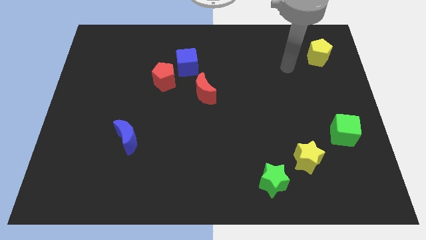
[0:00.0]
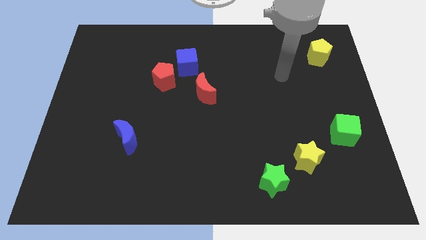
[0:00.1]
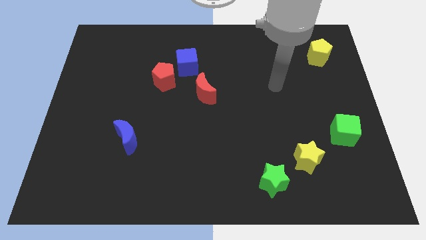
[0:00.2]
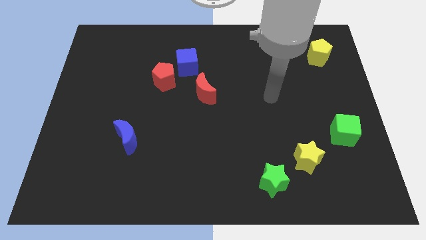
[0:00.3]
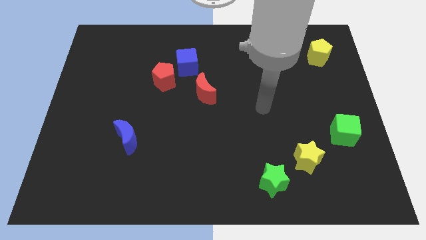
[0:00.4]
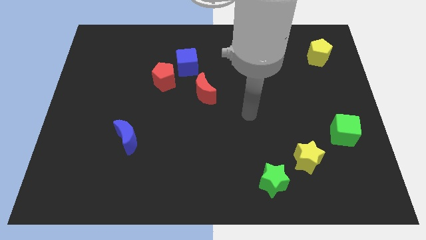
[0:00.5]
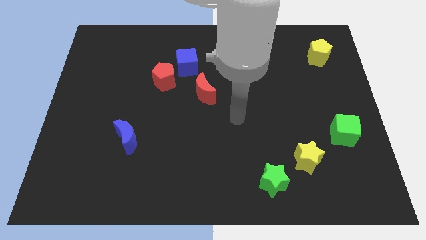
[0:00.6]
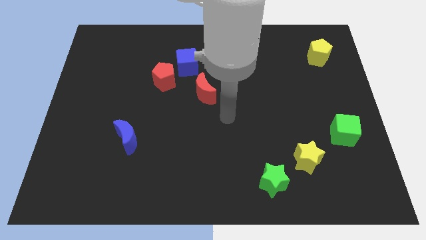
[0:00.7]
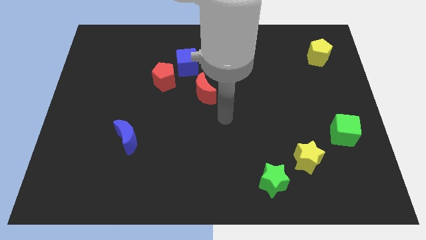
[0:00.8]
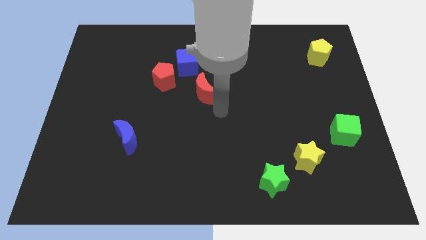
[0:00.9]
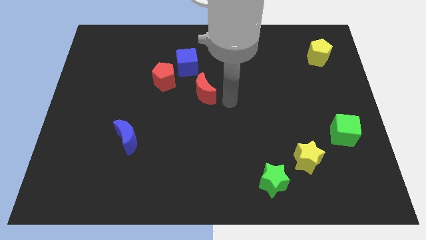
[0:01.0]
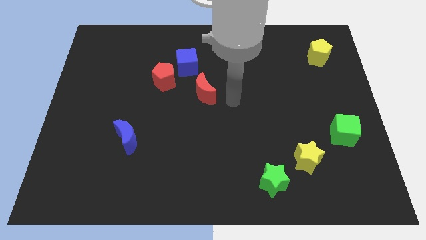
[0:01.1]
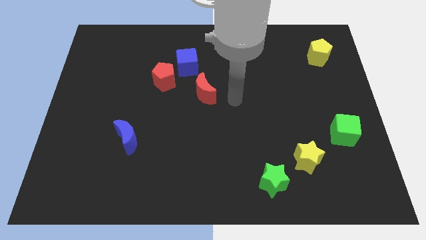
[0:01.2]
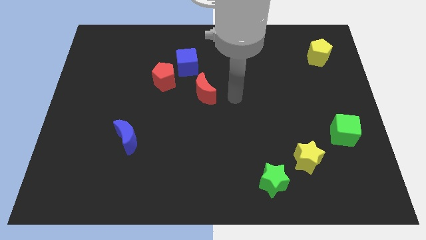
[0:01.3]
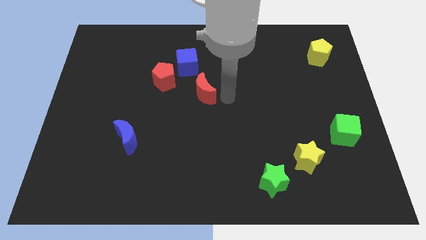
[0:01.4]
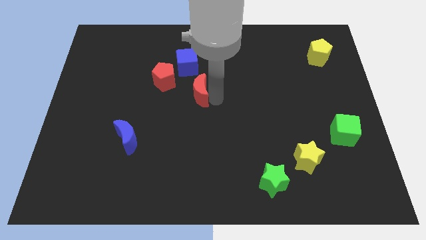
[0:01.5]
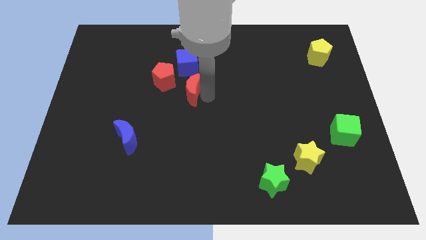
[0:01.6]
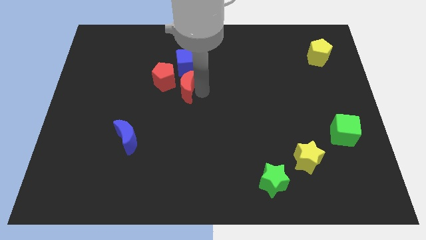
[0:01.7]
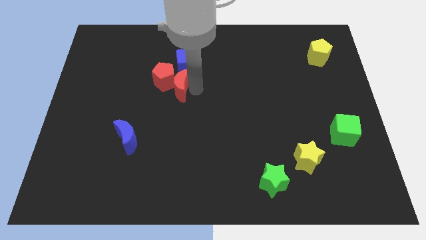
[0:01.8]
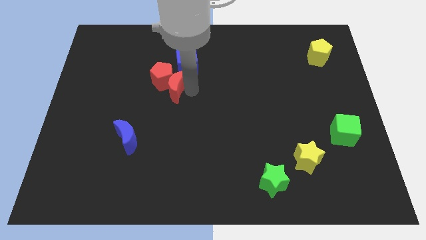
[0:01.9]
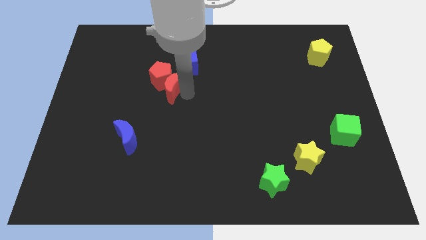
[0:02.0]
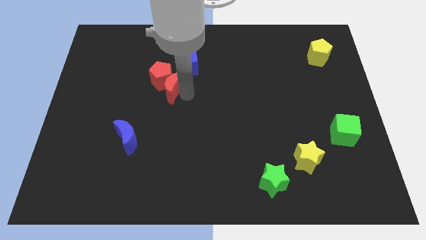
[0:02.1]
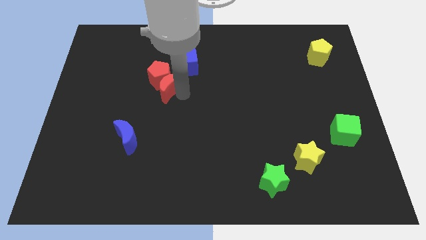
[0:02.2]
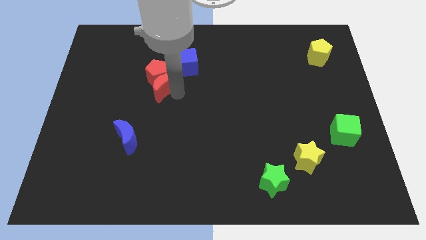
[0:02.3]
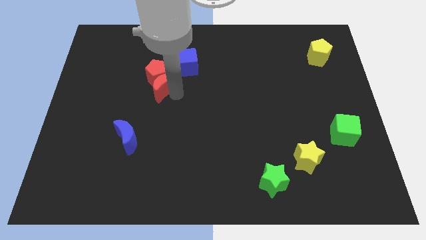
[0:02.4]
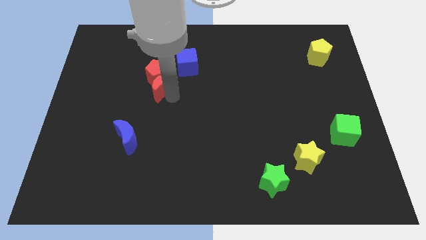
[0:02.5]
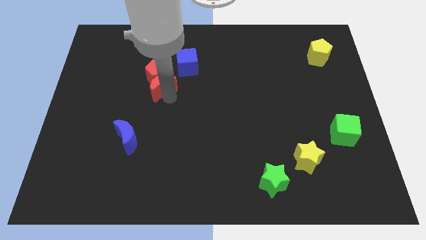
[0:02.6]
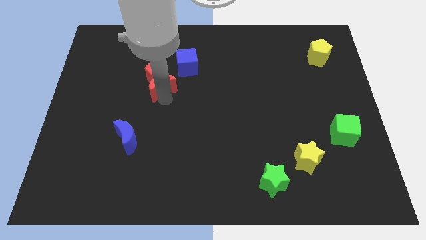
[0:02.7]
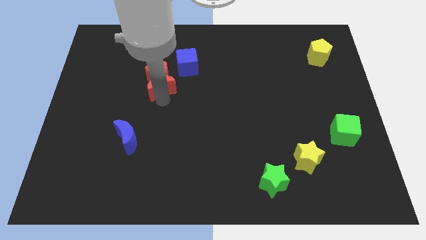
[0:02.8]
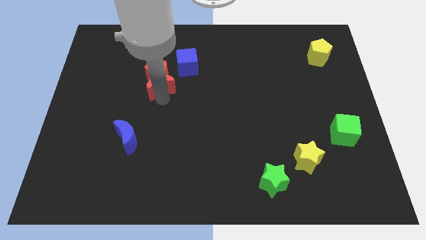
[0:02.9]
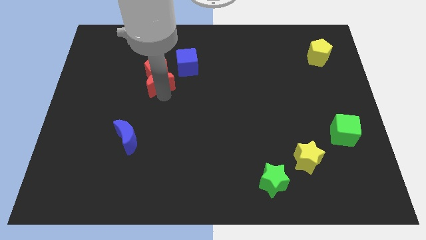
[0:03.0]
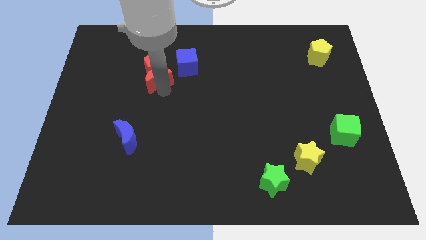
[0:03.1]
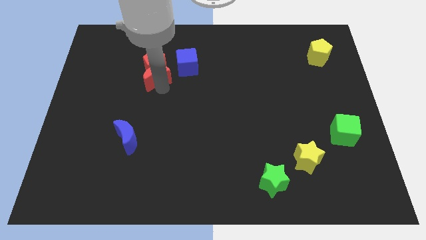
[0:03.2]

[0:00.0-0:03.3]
push the red moon into the red pentagon

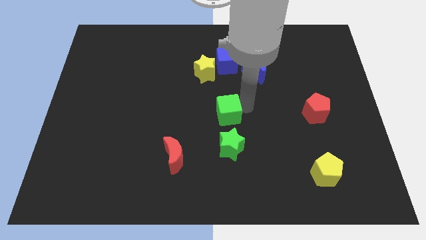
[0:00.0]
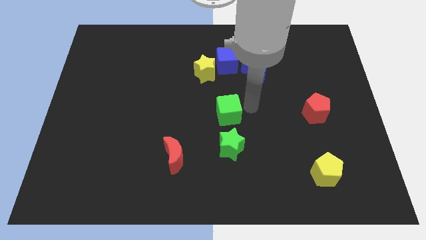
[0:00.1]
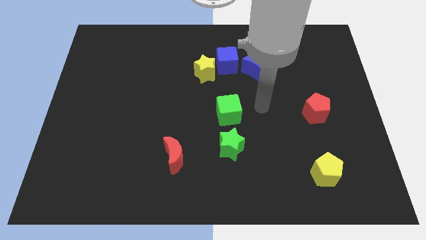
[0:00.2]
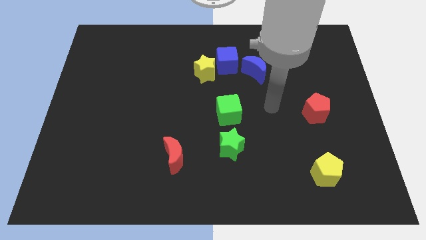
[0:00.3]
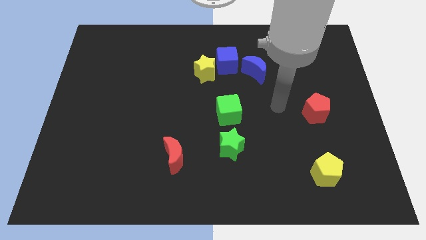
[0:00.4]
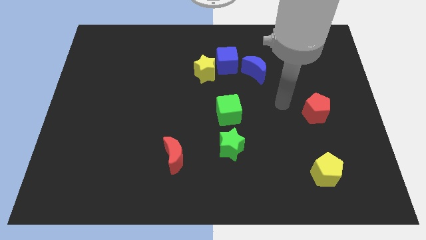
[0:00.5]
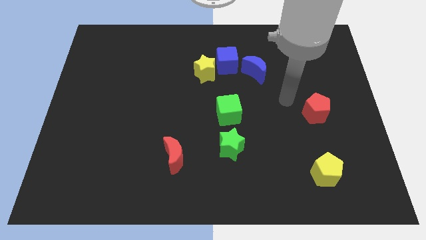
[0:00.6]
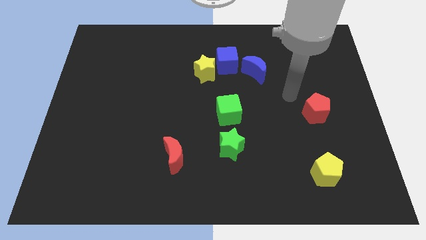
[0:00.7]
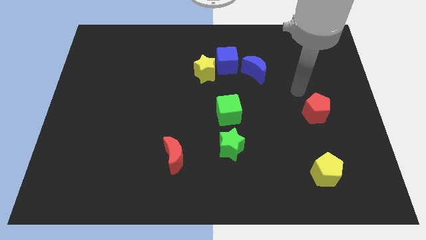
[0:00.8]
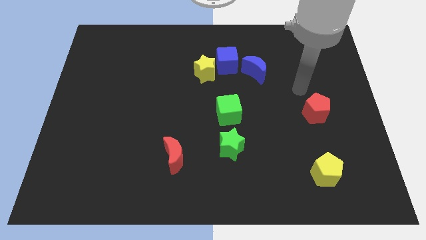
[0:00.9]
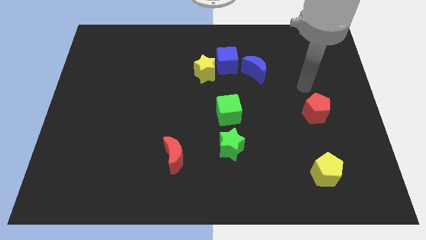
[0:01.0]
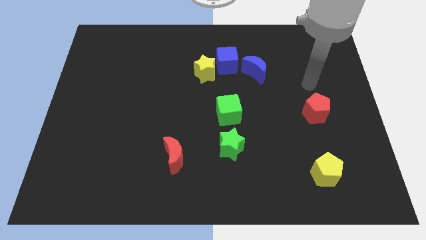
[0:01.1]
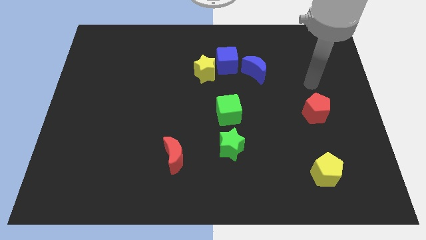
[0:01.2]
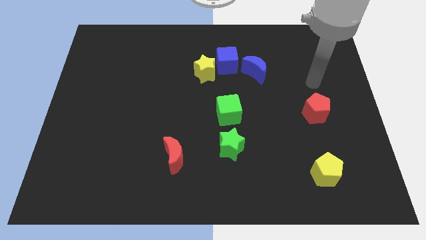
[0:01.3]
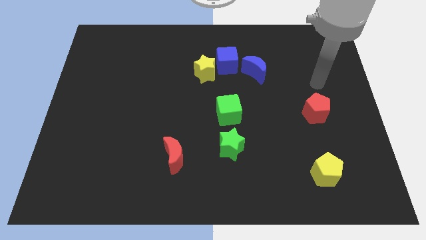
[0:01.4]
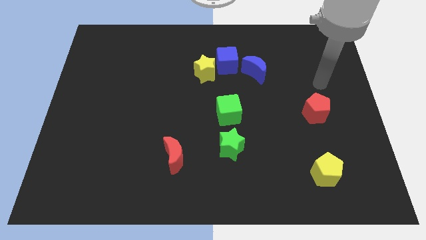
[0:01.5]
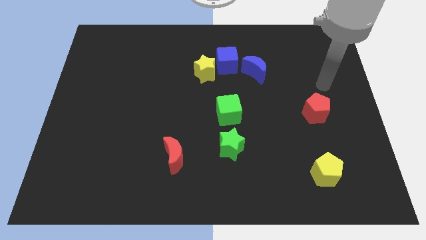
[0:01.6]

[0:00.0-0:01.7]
move arm away from green cube

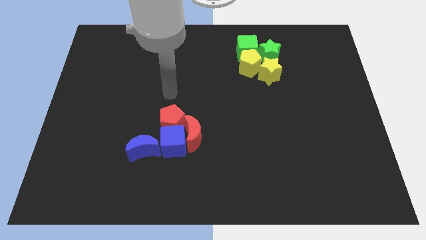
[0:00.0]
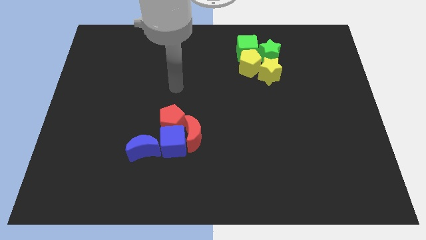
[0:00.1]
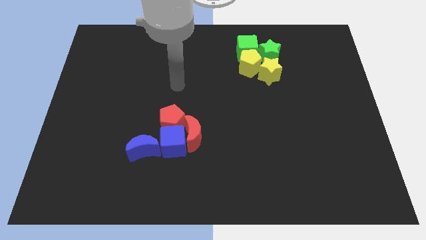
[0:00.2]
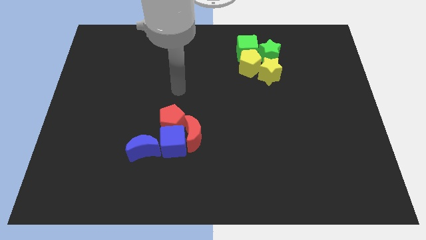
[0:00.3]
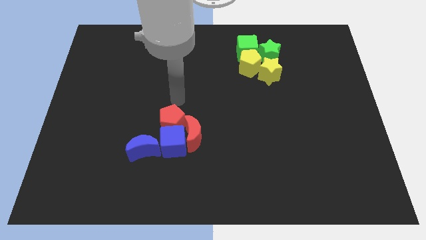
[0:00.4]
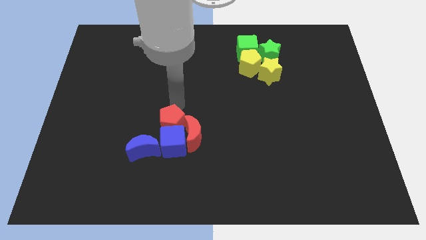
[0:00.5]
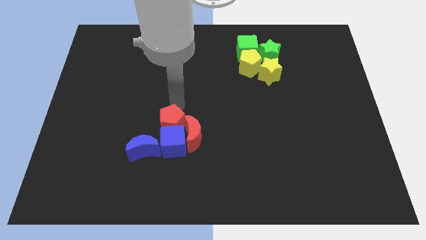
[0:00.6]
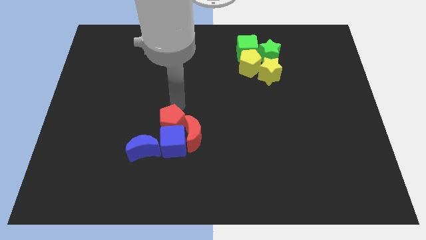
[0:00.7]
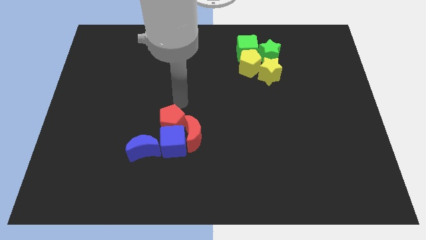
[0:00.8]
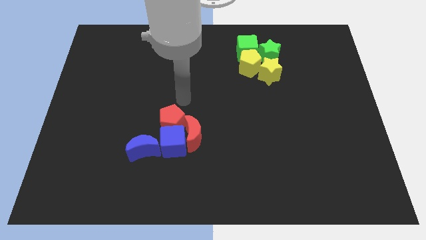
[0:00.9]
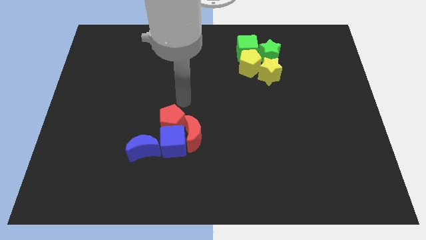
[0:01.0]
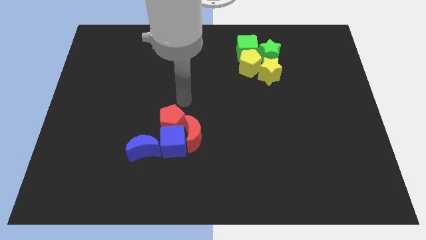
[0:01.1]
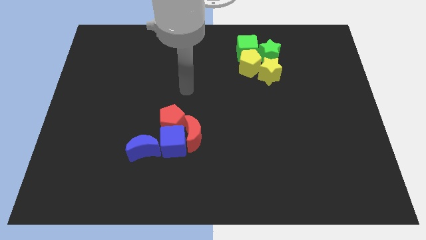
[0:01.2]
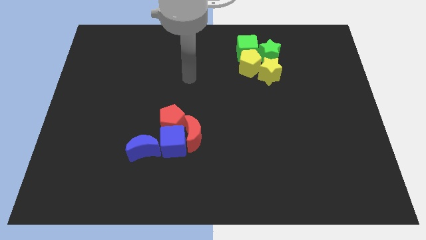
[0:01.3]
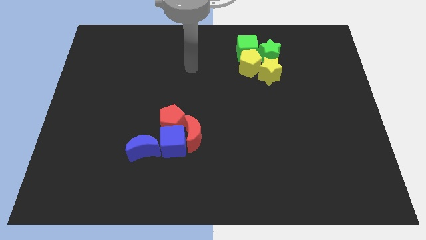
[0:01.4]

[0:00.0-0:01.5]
move your arm above red pentagon

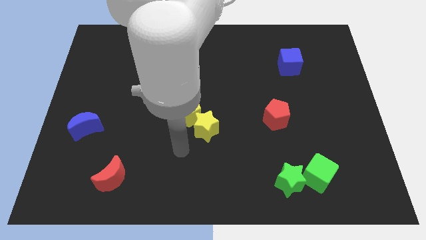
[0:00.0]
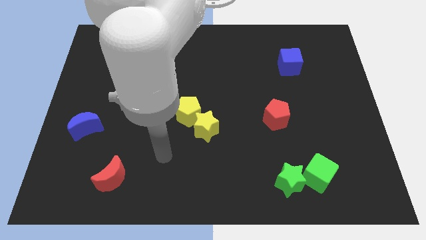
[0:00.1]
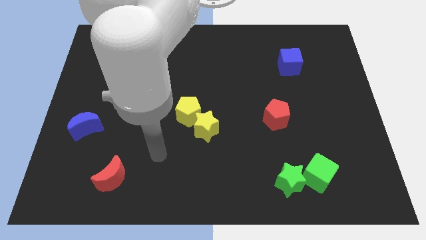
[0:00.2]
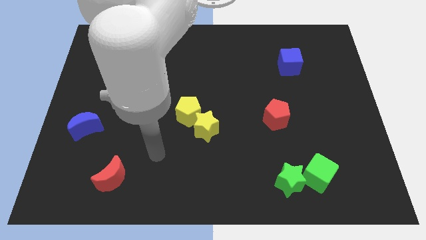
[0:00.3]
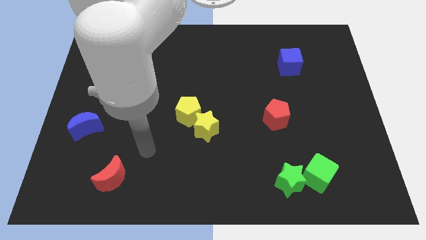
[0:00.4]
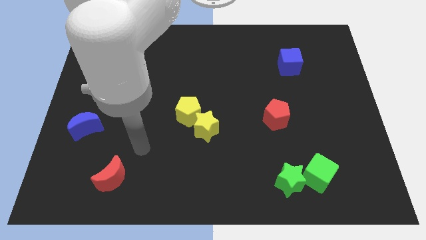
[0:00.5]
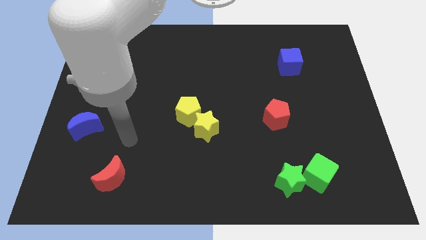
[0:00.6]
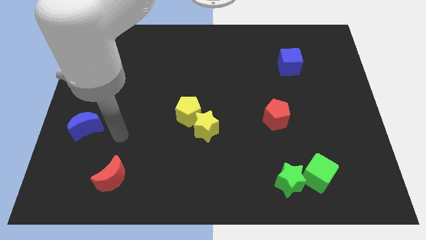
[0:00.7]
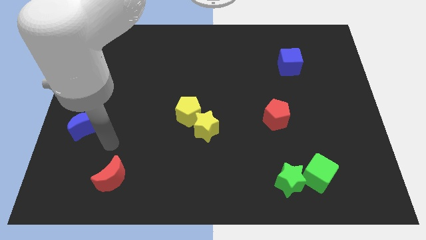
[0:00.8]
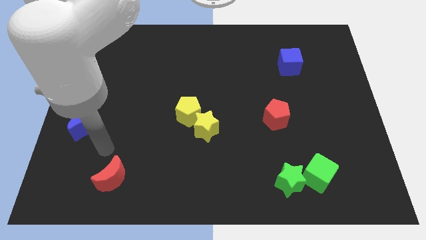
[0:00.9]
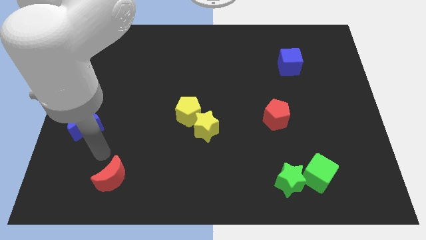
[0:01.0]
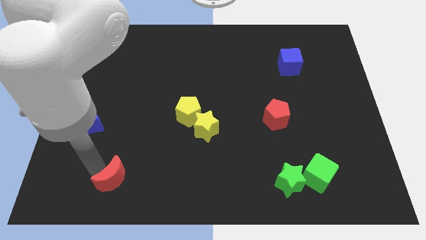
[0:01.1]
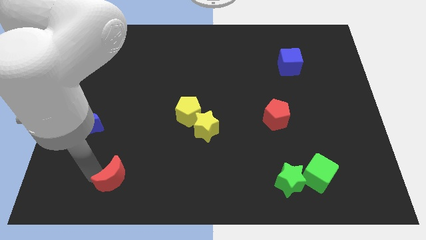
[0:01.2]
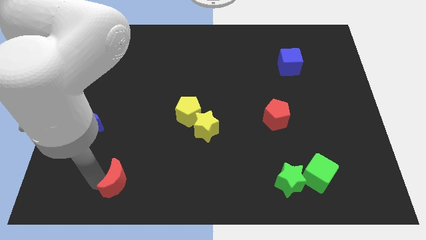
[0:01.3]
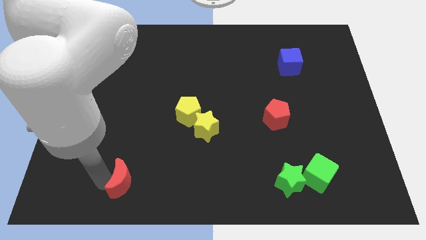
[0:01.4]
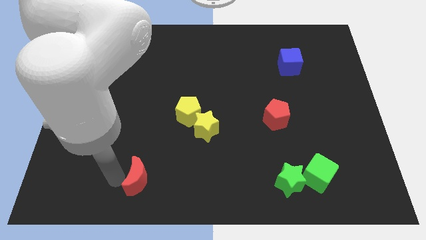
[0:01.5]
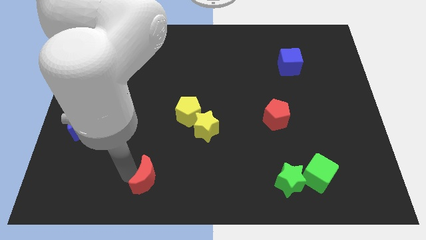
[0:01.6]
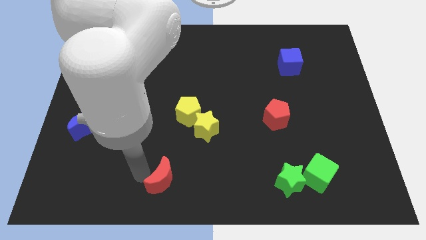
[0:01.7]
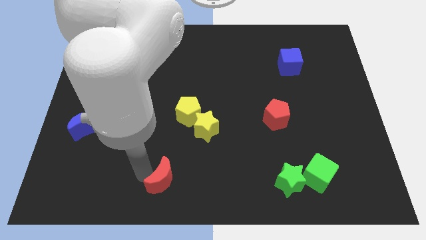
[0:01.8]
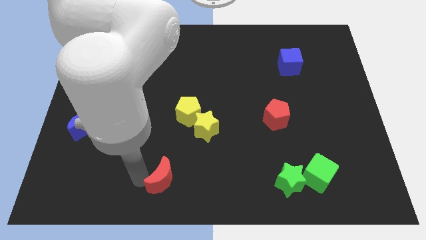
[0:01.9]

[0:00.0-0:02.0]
move the red moon towards the green star

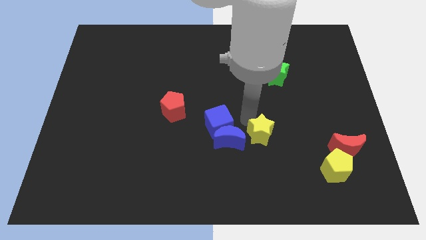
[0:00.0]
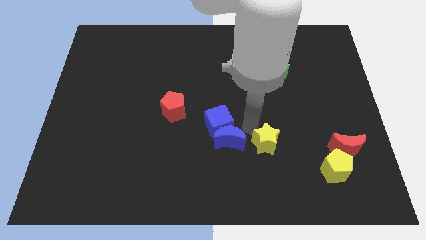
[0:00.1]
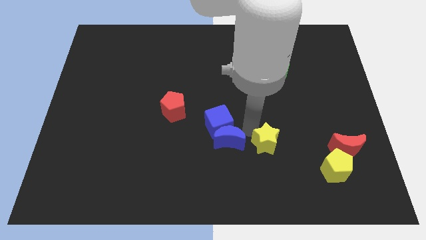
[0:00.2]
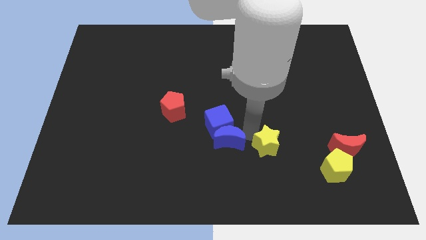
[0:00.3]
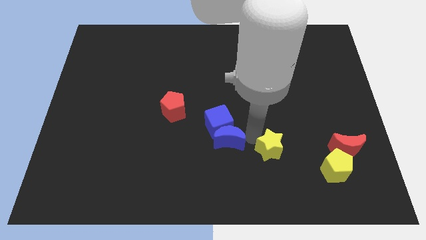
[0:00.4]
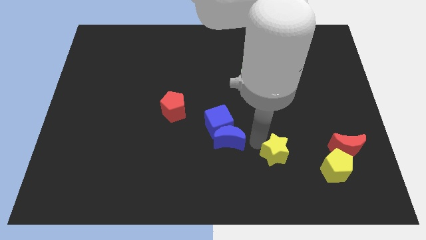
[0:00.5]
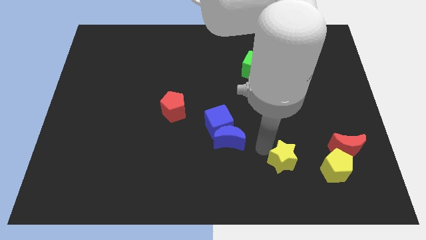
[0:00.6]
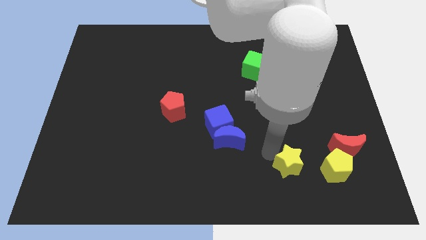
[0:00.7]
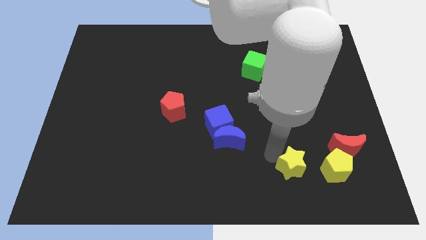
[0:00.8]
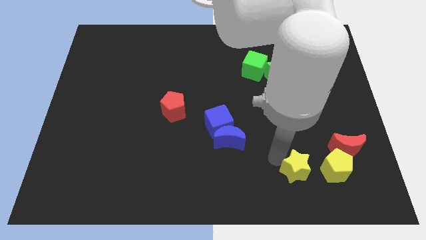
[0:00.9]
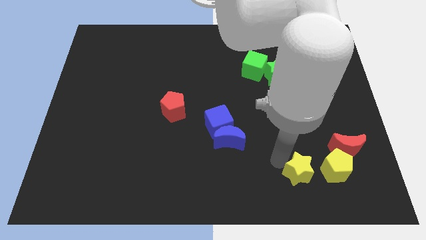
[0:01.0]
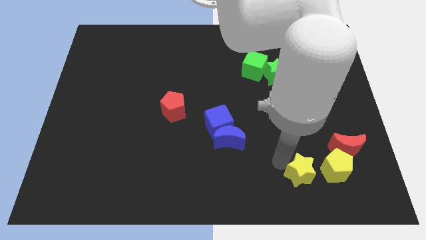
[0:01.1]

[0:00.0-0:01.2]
push the yellow star at the left side of the yellow pentagon
